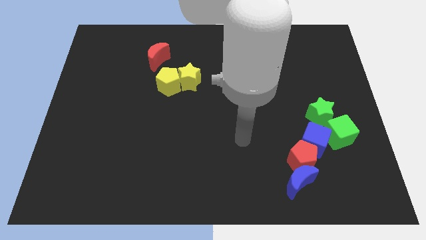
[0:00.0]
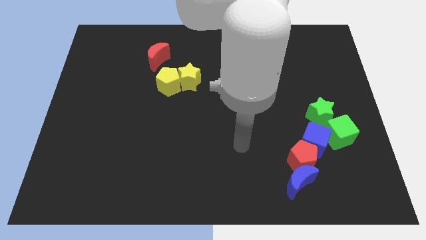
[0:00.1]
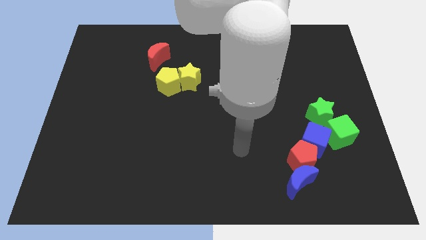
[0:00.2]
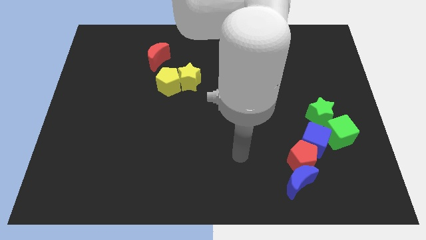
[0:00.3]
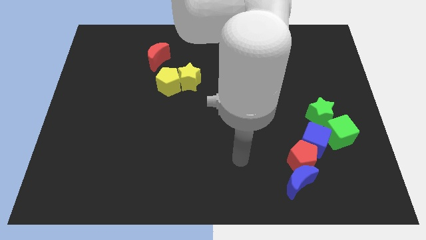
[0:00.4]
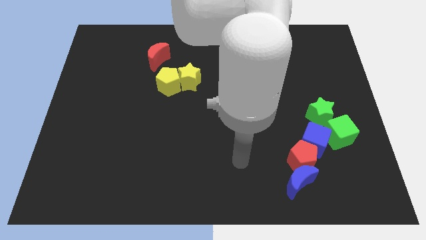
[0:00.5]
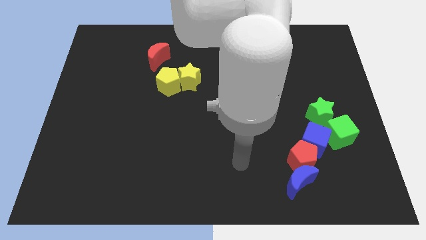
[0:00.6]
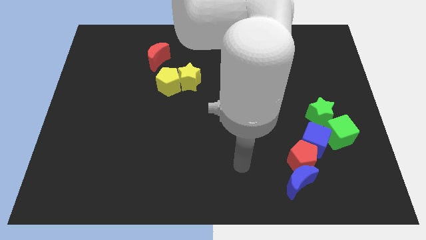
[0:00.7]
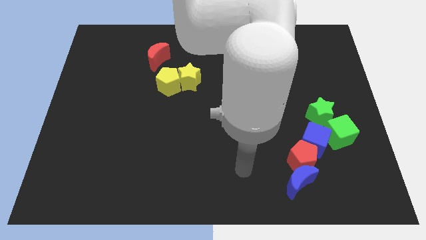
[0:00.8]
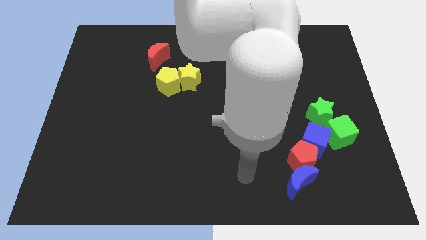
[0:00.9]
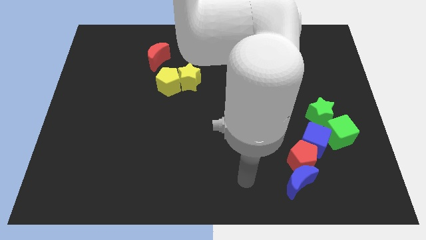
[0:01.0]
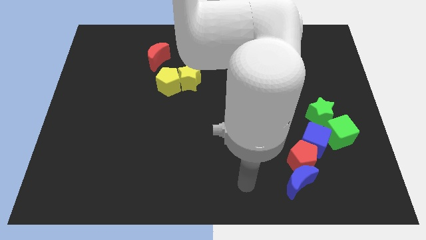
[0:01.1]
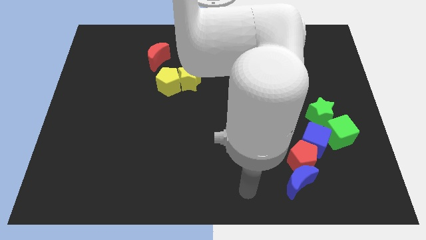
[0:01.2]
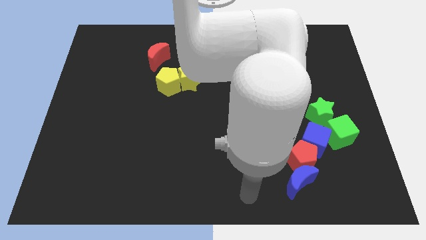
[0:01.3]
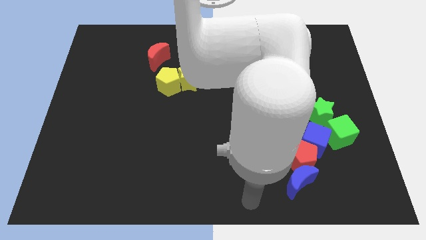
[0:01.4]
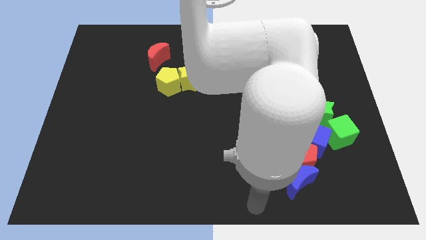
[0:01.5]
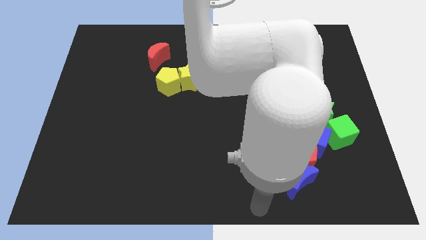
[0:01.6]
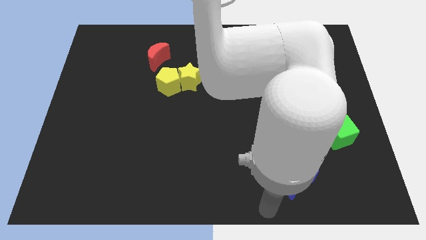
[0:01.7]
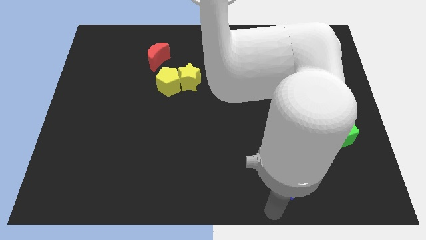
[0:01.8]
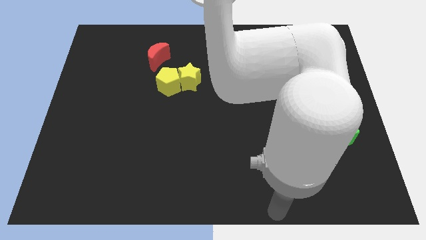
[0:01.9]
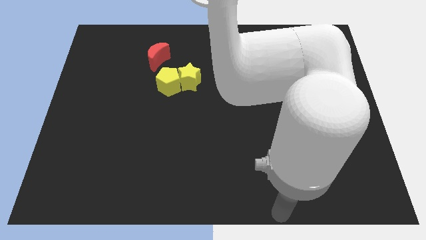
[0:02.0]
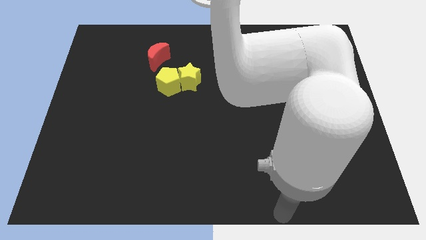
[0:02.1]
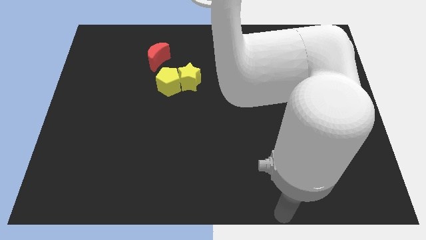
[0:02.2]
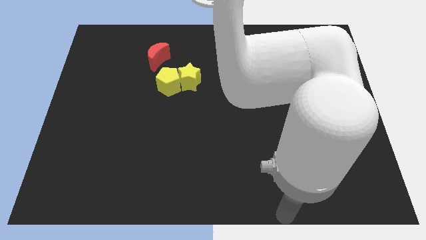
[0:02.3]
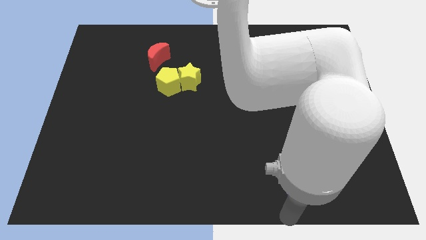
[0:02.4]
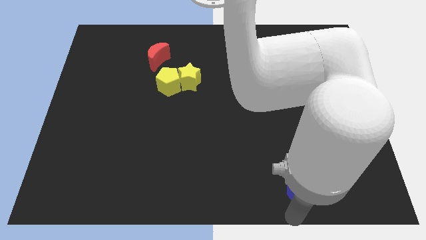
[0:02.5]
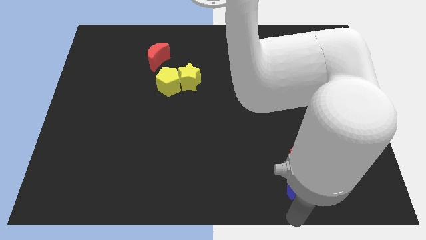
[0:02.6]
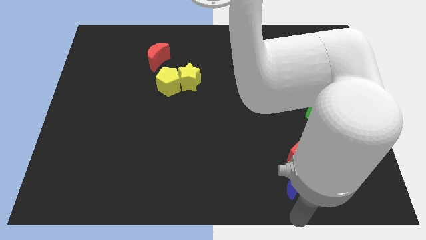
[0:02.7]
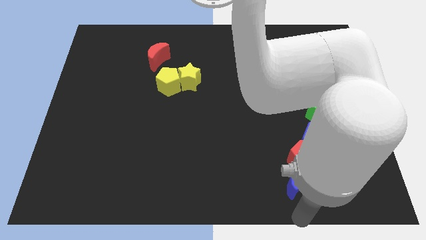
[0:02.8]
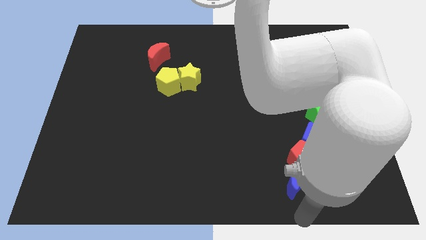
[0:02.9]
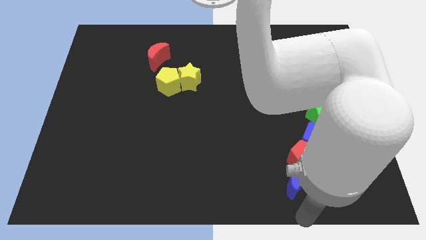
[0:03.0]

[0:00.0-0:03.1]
place your arm at the bottom of the blue crescent

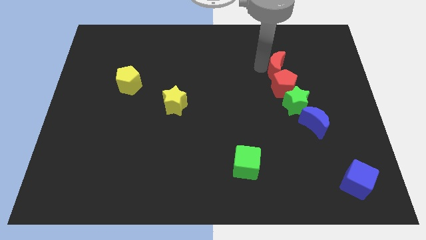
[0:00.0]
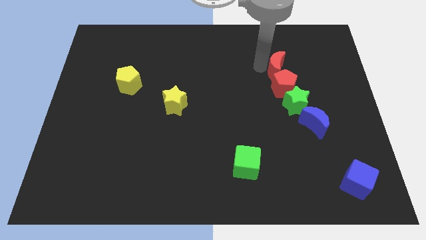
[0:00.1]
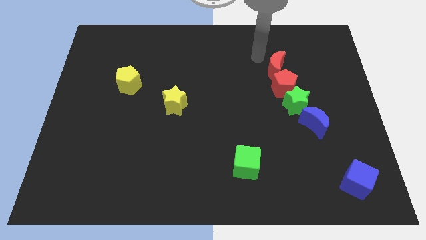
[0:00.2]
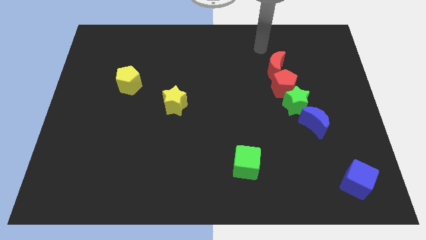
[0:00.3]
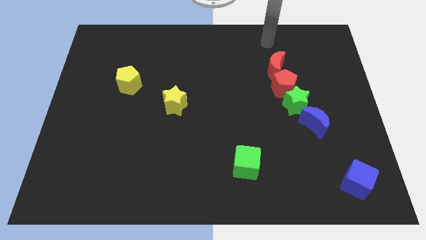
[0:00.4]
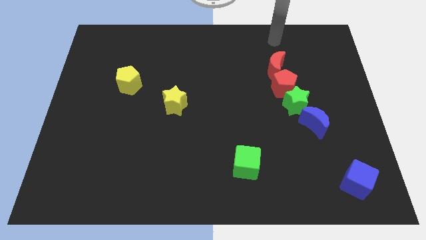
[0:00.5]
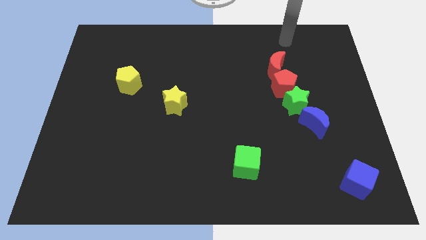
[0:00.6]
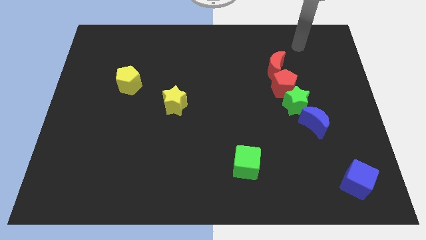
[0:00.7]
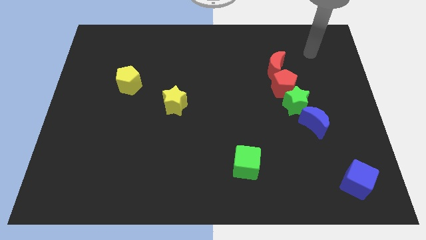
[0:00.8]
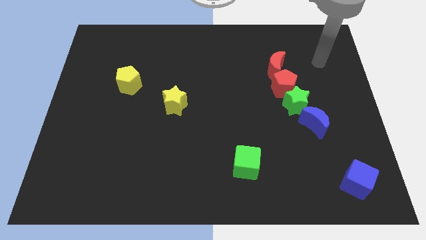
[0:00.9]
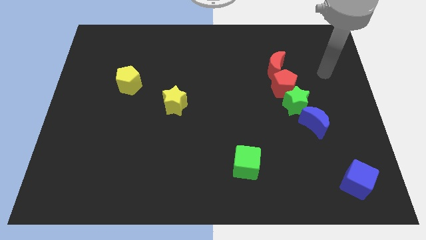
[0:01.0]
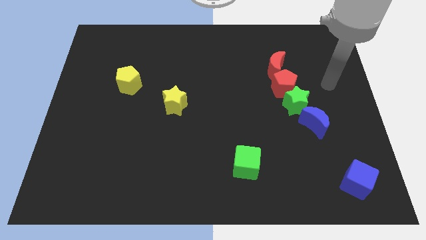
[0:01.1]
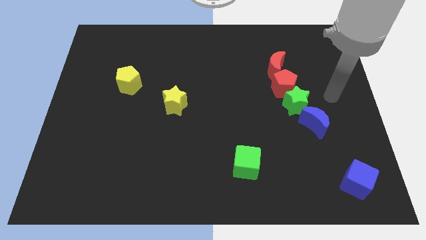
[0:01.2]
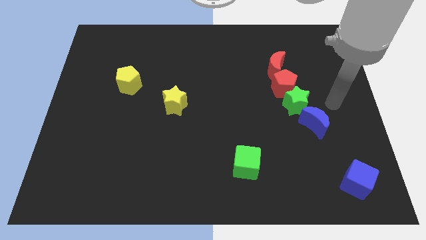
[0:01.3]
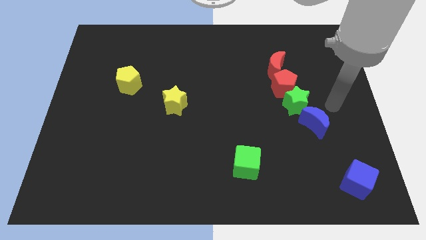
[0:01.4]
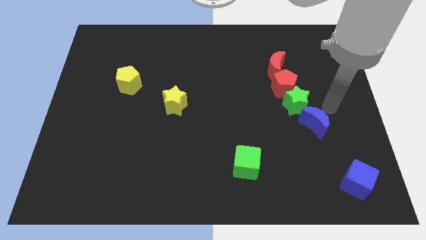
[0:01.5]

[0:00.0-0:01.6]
move the arm to the right side of the blue moon

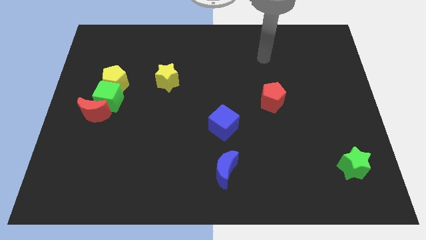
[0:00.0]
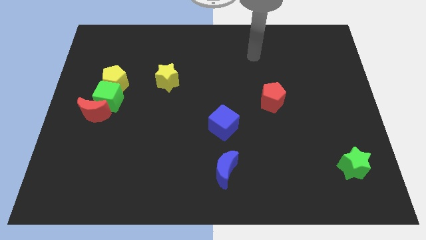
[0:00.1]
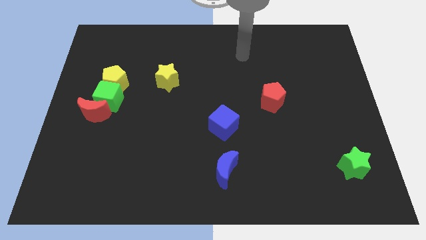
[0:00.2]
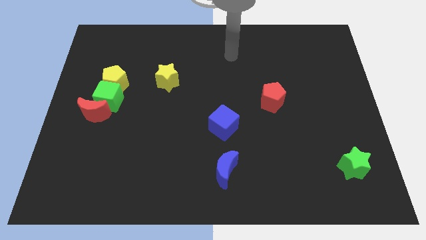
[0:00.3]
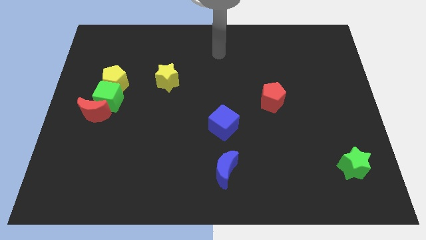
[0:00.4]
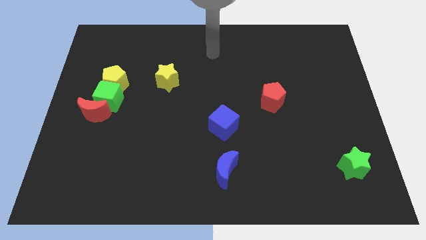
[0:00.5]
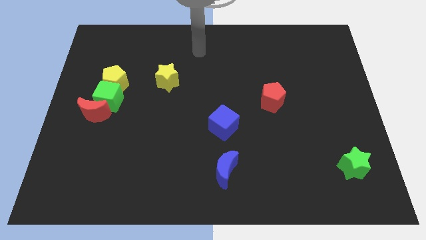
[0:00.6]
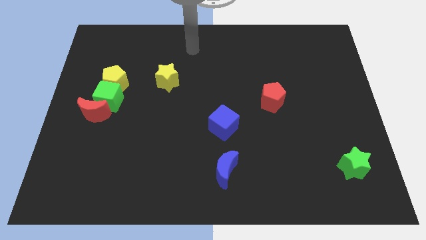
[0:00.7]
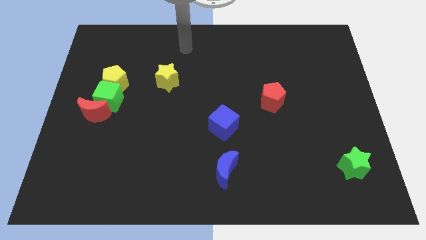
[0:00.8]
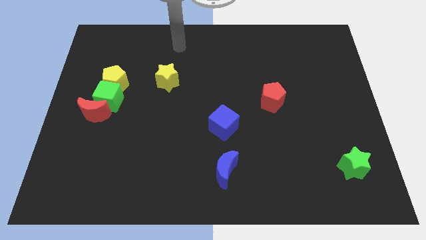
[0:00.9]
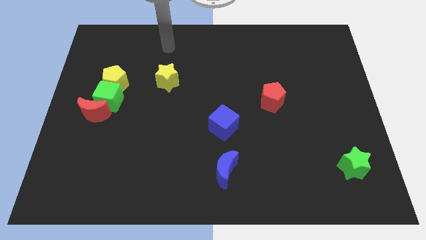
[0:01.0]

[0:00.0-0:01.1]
put your arm vertically above the yellow star

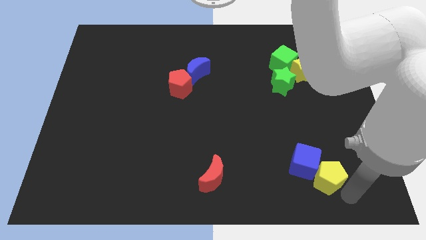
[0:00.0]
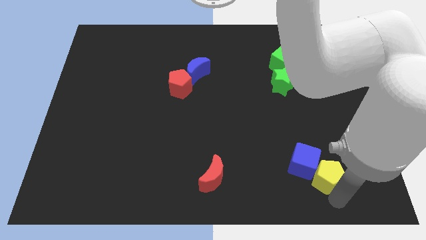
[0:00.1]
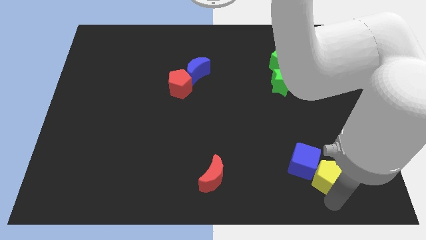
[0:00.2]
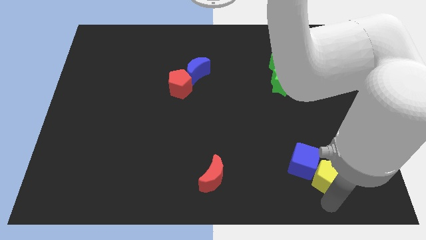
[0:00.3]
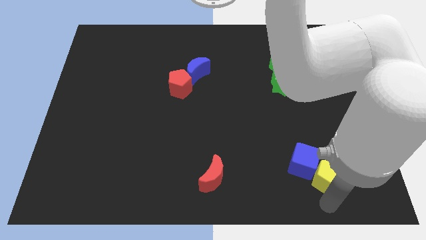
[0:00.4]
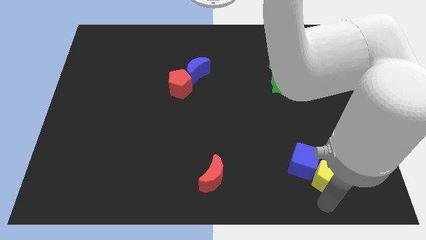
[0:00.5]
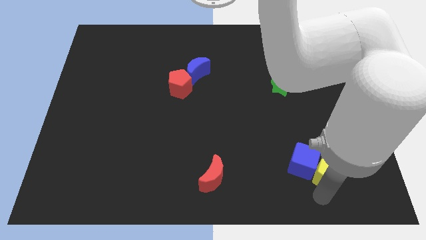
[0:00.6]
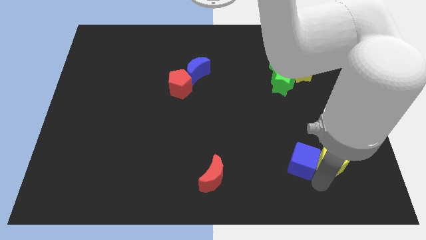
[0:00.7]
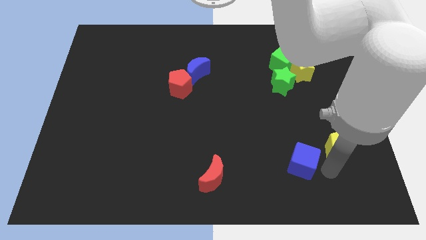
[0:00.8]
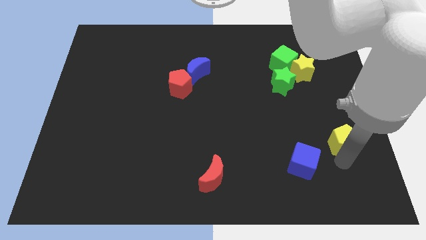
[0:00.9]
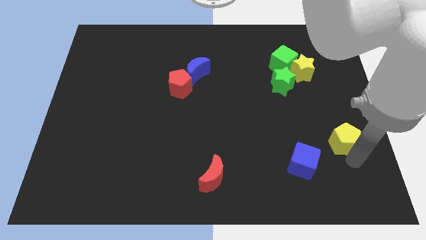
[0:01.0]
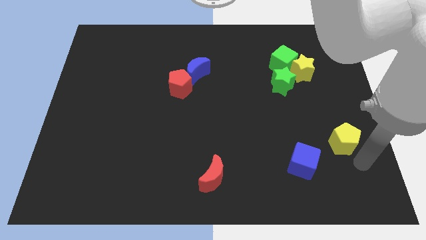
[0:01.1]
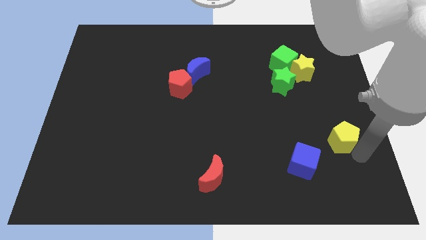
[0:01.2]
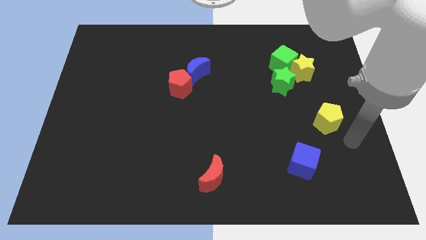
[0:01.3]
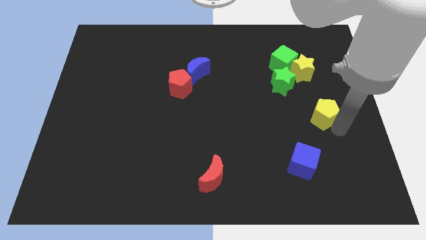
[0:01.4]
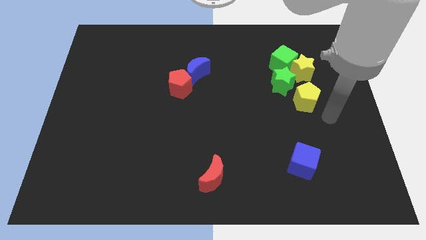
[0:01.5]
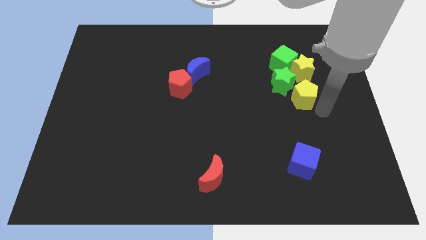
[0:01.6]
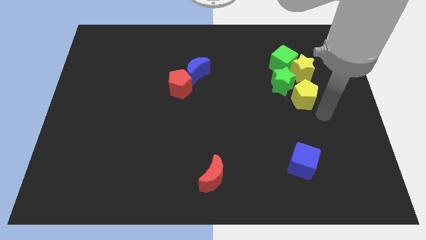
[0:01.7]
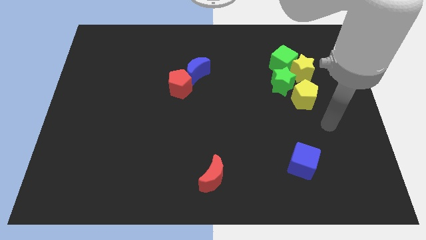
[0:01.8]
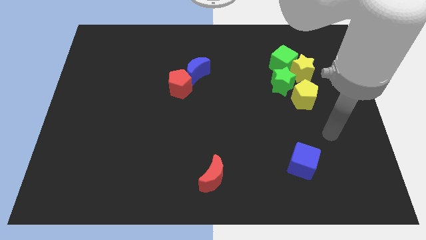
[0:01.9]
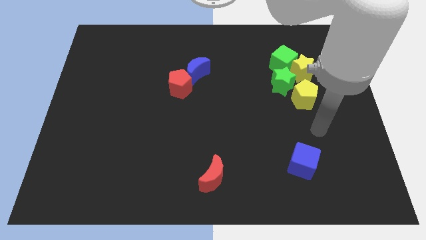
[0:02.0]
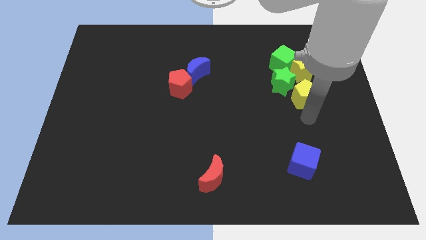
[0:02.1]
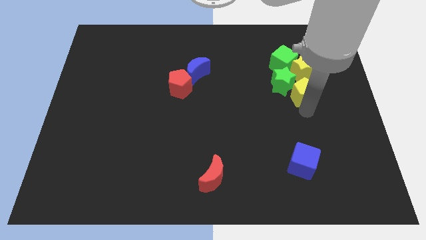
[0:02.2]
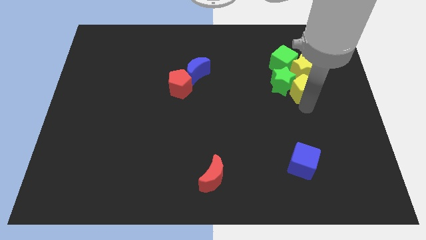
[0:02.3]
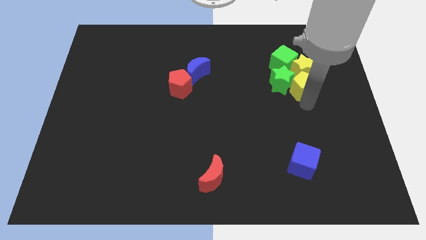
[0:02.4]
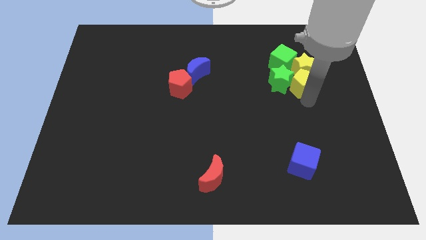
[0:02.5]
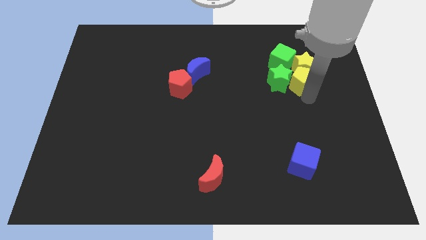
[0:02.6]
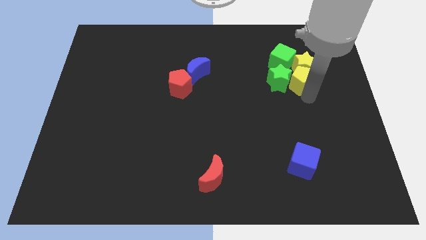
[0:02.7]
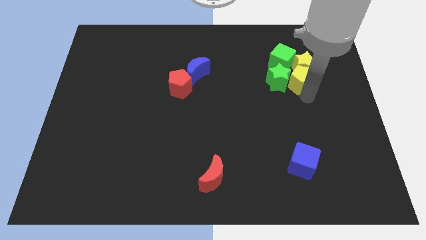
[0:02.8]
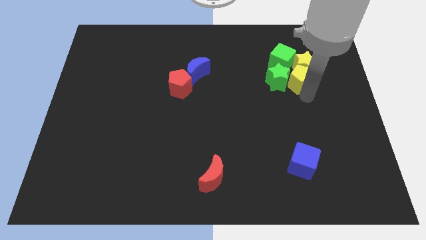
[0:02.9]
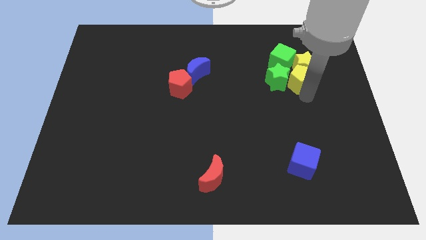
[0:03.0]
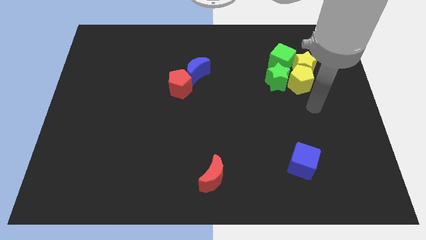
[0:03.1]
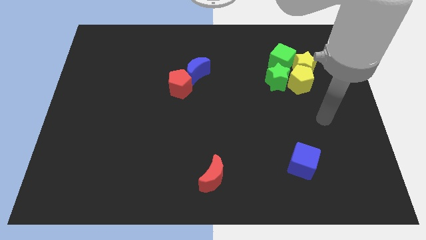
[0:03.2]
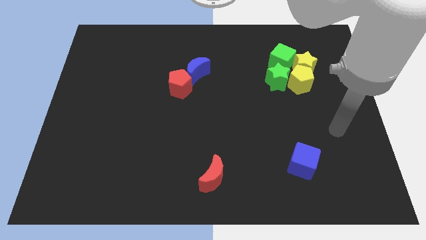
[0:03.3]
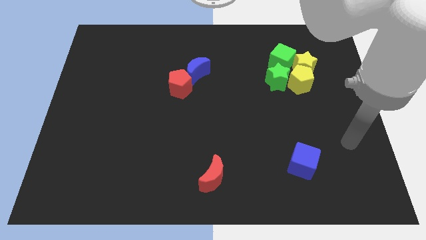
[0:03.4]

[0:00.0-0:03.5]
add the yellow pentagon to the group of both green blocks and yellow star
